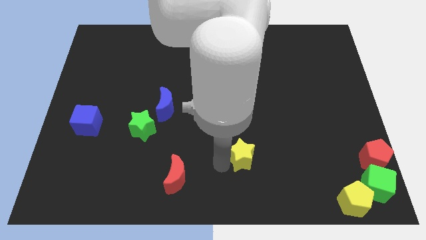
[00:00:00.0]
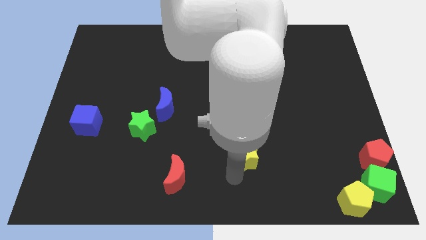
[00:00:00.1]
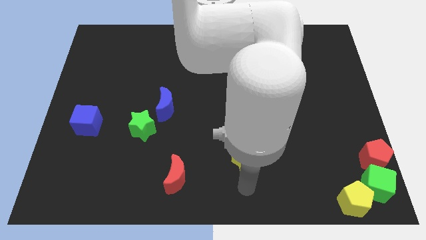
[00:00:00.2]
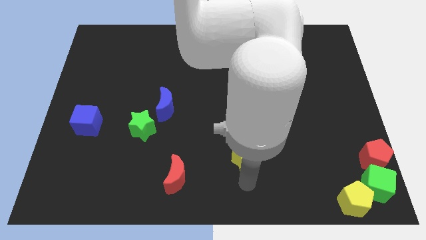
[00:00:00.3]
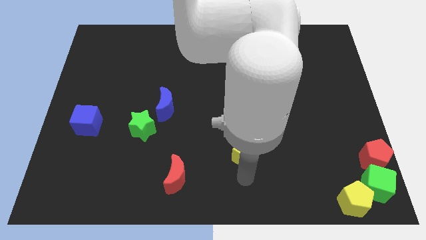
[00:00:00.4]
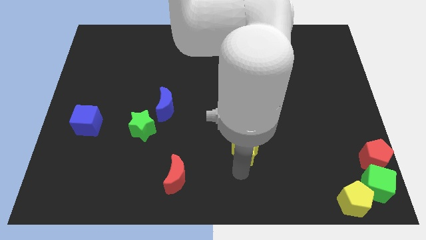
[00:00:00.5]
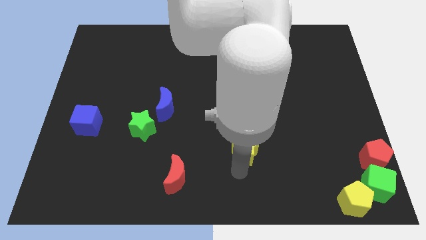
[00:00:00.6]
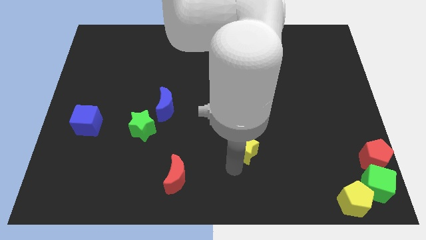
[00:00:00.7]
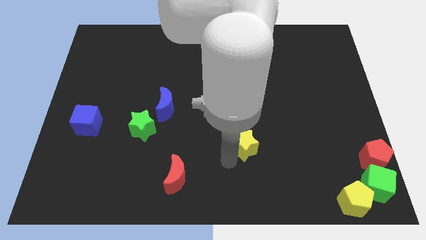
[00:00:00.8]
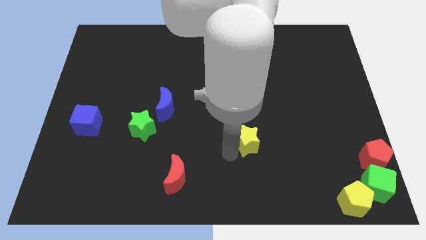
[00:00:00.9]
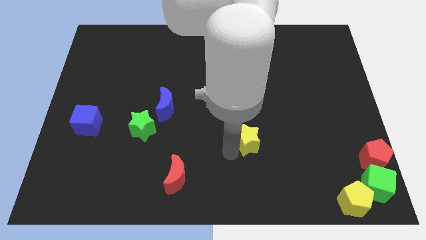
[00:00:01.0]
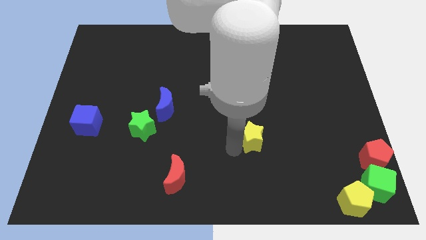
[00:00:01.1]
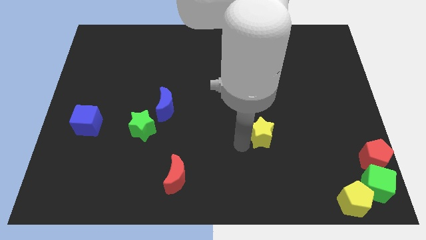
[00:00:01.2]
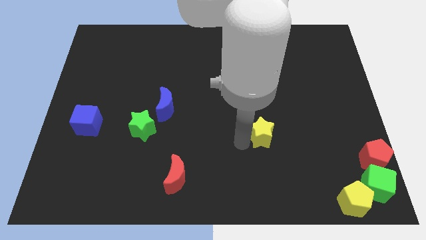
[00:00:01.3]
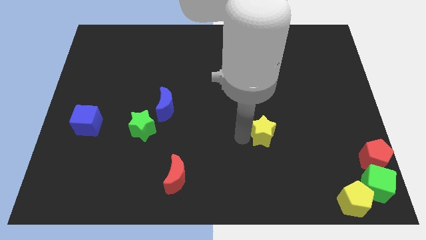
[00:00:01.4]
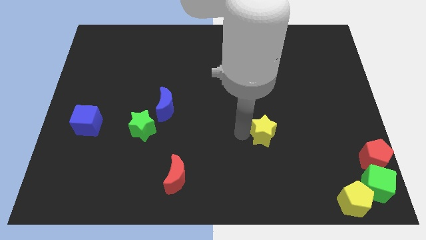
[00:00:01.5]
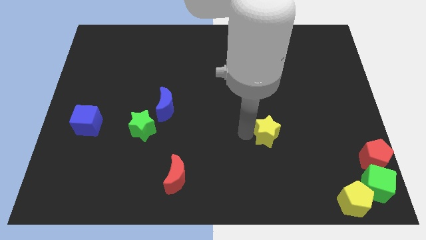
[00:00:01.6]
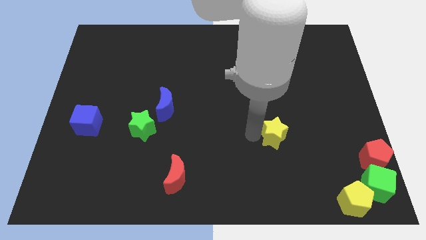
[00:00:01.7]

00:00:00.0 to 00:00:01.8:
move yellow star slightly to the top side of the board

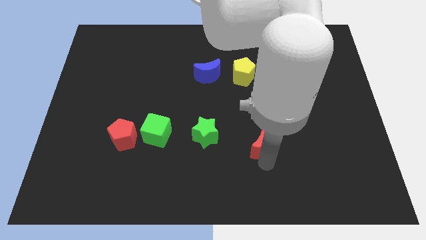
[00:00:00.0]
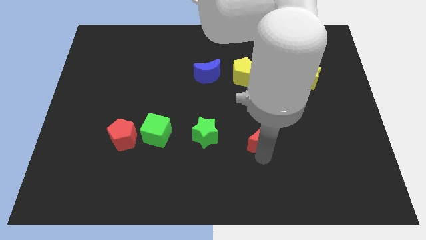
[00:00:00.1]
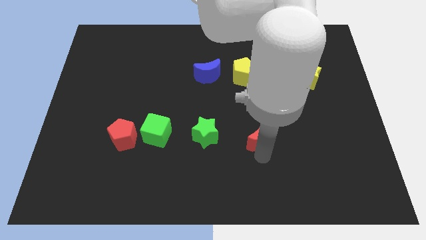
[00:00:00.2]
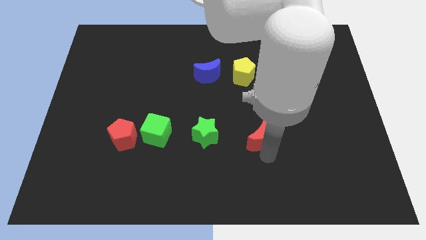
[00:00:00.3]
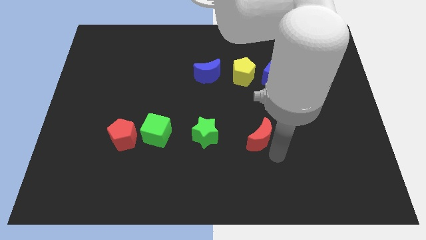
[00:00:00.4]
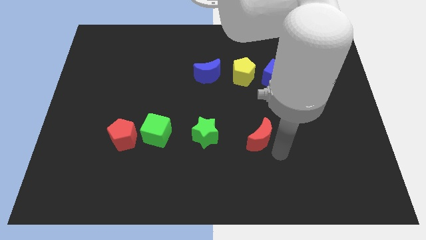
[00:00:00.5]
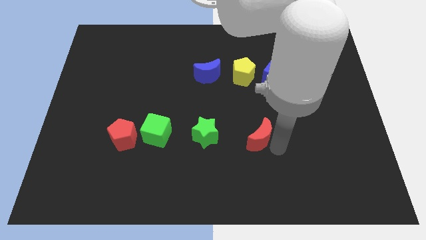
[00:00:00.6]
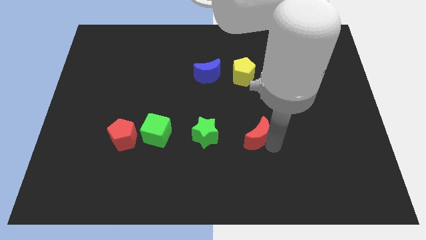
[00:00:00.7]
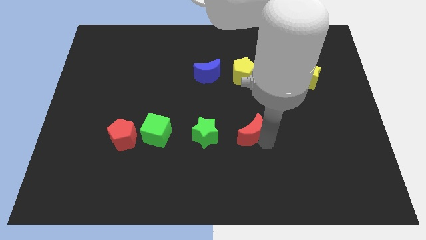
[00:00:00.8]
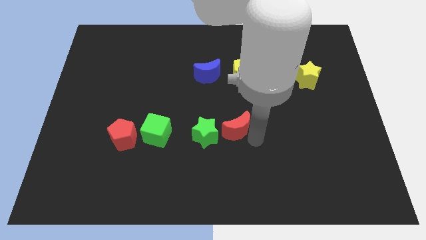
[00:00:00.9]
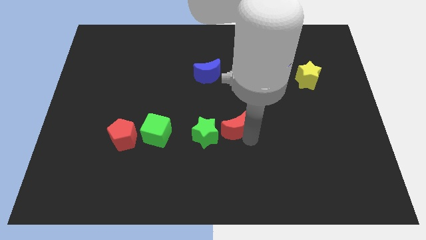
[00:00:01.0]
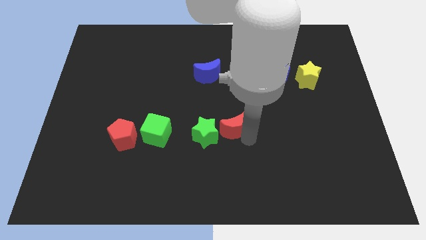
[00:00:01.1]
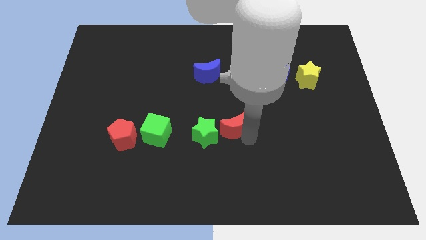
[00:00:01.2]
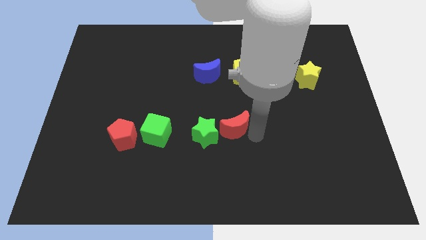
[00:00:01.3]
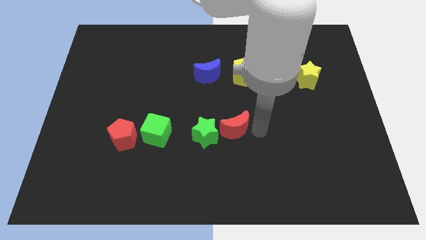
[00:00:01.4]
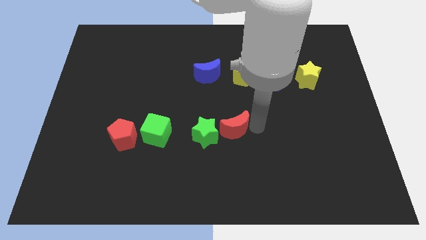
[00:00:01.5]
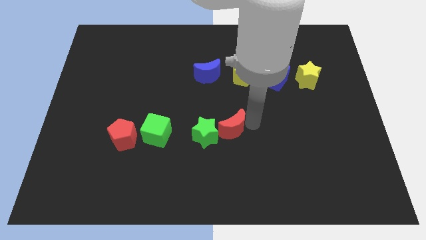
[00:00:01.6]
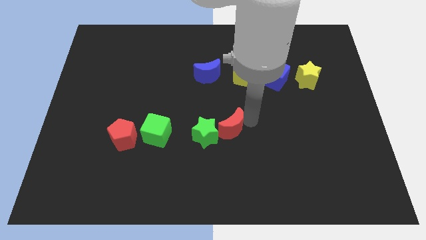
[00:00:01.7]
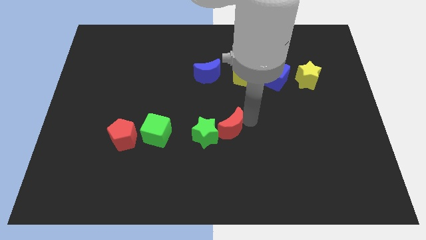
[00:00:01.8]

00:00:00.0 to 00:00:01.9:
push red moon into green star

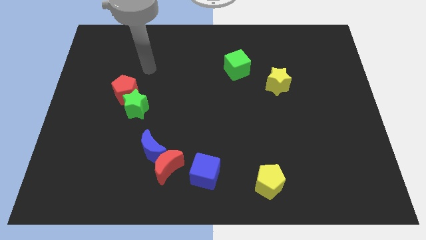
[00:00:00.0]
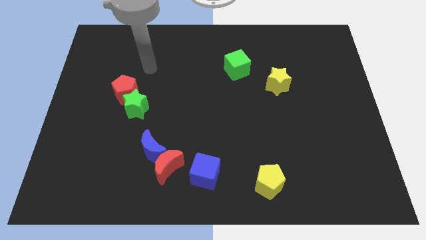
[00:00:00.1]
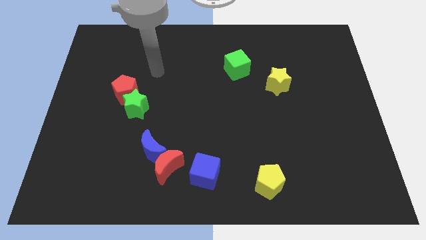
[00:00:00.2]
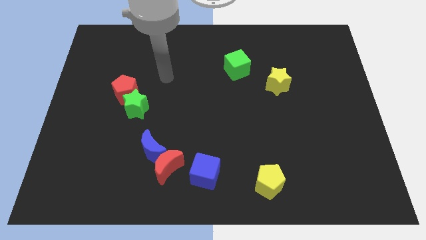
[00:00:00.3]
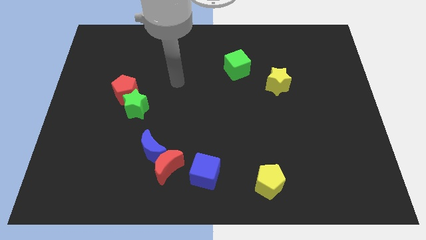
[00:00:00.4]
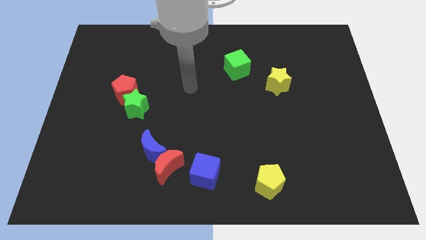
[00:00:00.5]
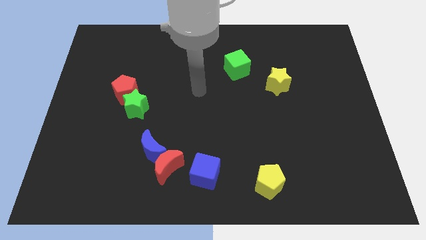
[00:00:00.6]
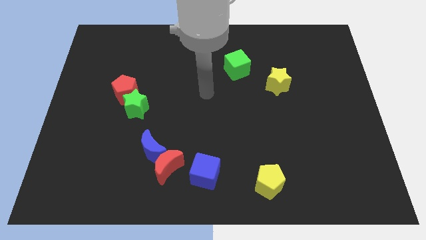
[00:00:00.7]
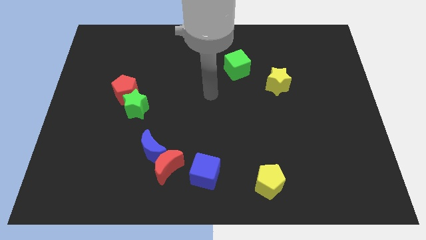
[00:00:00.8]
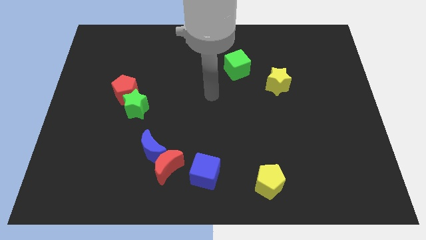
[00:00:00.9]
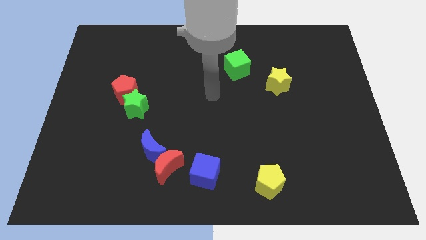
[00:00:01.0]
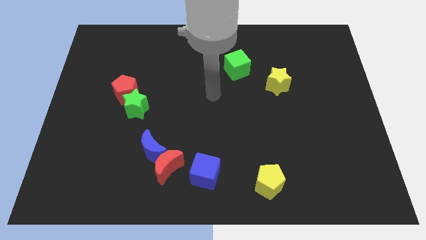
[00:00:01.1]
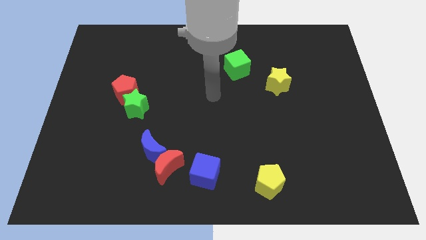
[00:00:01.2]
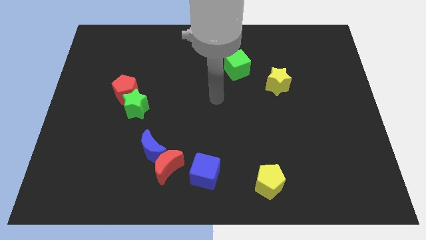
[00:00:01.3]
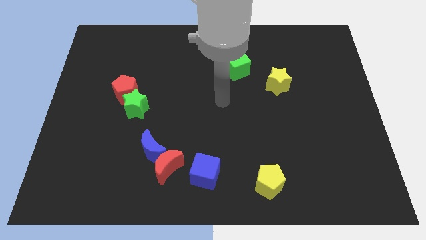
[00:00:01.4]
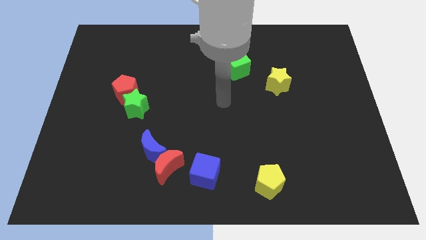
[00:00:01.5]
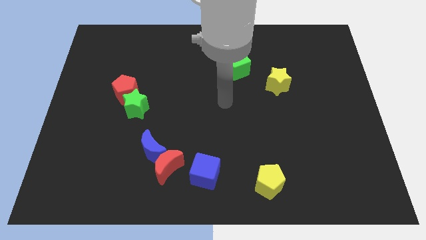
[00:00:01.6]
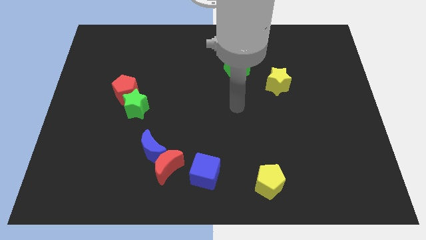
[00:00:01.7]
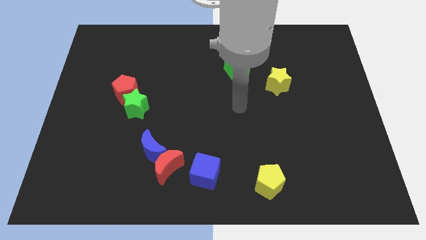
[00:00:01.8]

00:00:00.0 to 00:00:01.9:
point your arm at the bottom of the green cube

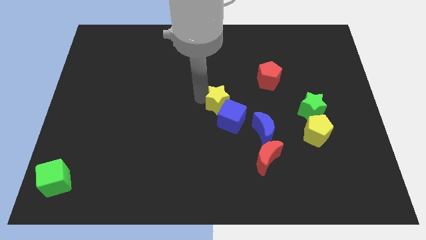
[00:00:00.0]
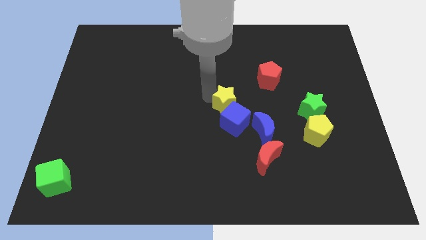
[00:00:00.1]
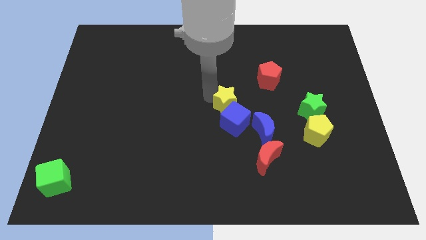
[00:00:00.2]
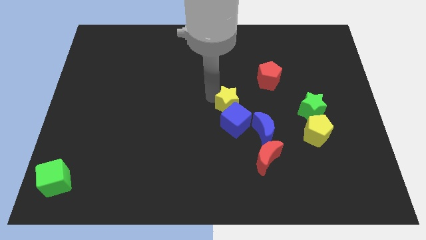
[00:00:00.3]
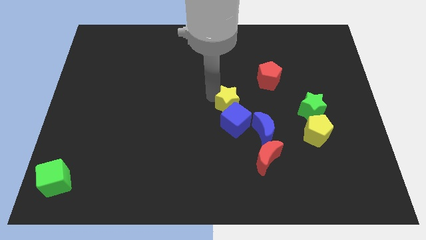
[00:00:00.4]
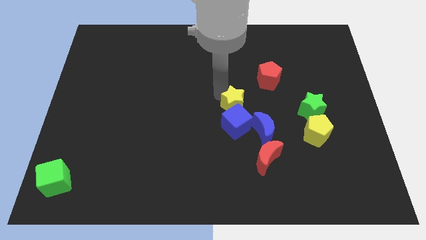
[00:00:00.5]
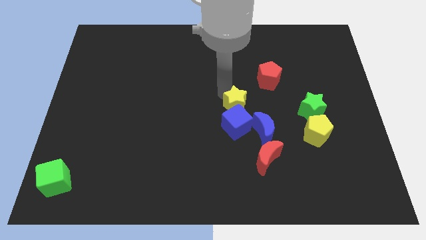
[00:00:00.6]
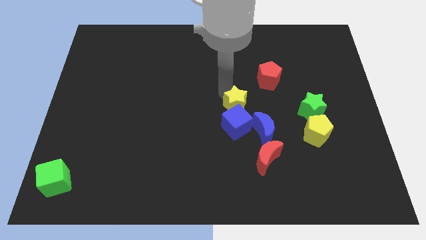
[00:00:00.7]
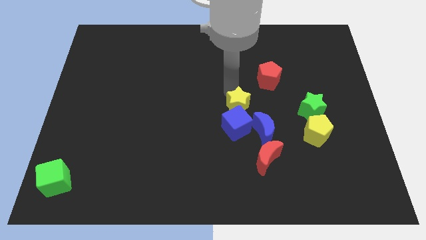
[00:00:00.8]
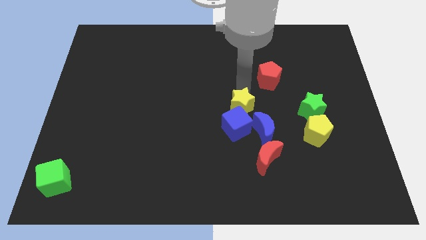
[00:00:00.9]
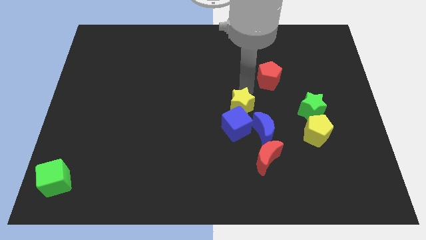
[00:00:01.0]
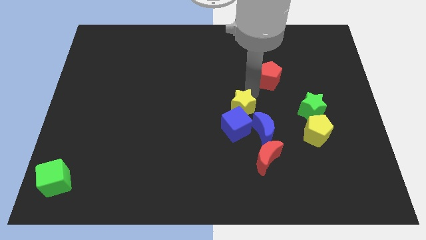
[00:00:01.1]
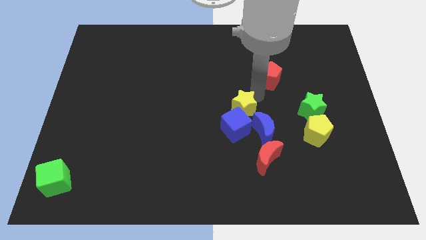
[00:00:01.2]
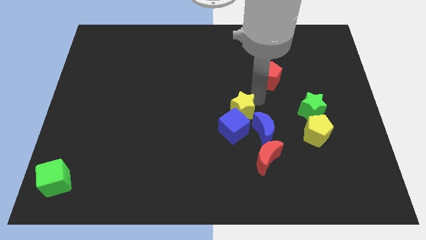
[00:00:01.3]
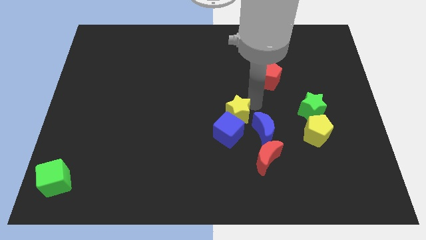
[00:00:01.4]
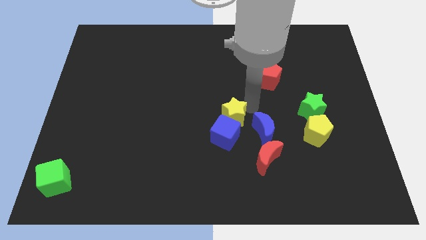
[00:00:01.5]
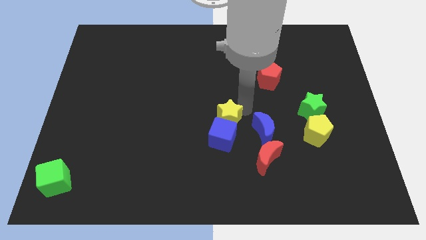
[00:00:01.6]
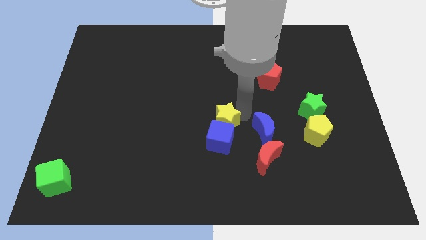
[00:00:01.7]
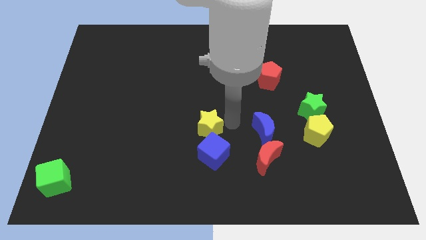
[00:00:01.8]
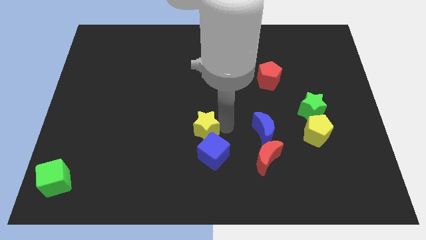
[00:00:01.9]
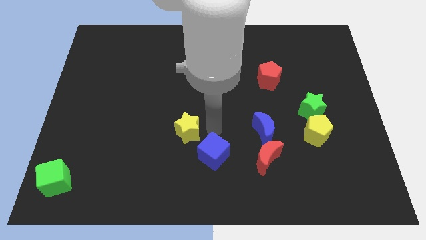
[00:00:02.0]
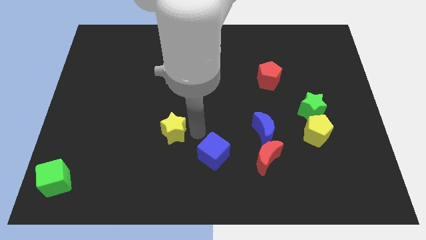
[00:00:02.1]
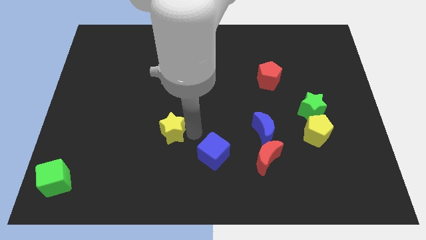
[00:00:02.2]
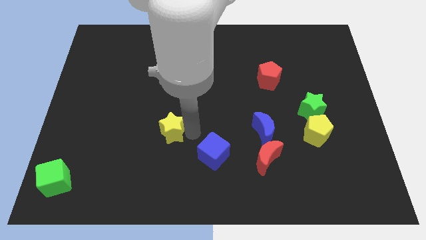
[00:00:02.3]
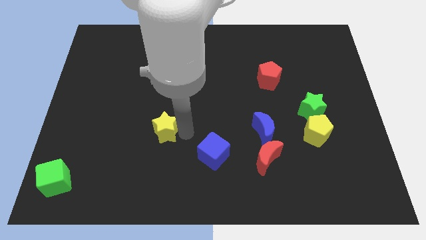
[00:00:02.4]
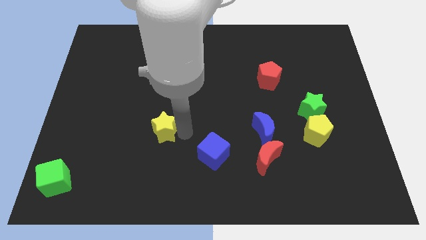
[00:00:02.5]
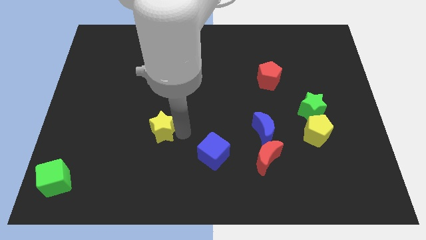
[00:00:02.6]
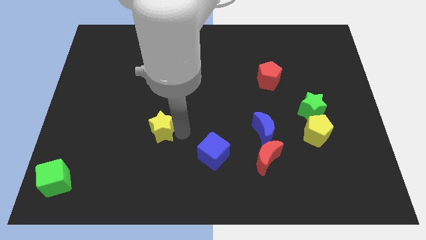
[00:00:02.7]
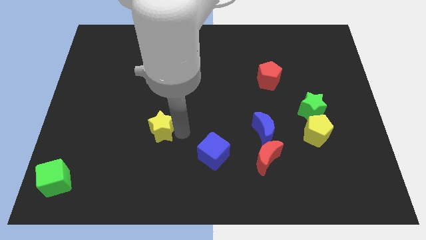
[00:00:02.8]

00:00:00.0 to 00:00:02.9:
place the yellow star diagonally top left to the blue cube

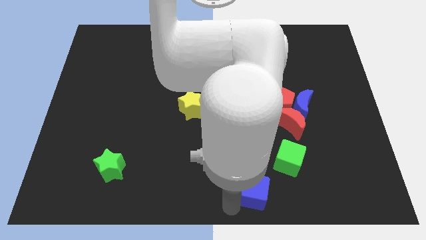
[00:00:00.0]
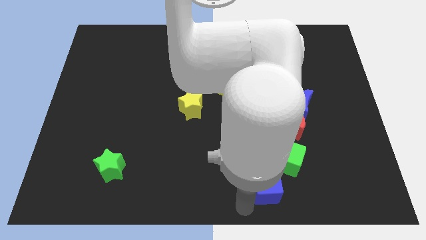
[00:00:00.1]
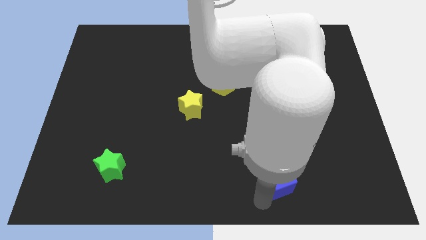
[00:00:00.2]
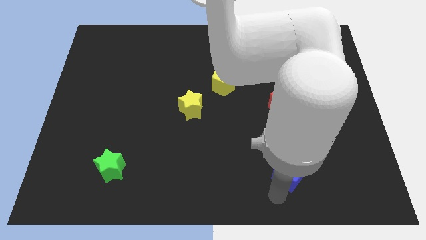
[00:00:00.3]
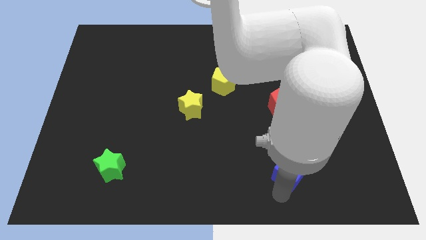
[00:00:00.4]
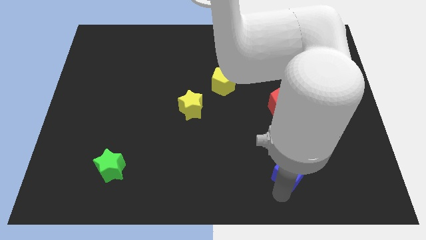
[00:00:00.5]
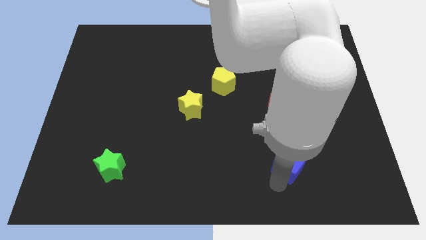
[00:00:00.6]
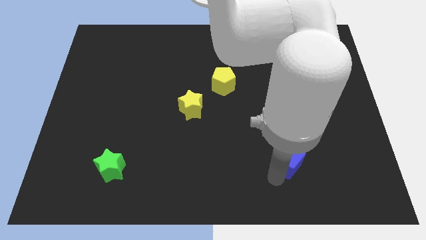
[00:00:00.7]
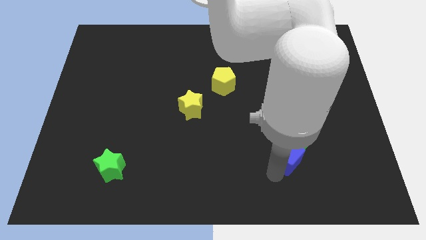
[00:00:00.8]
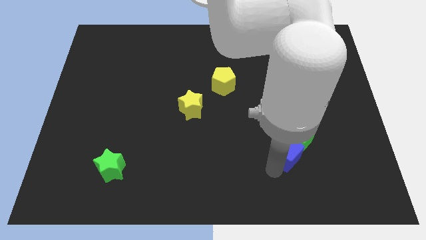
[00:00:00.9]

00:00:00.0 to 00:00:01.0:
push the green and blue cubes towards the red moon
